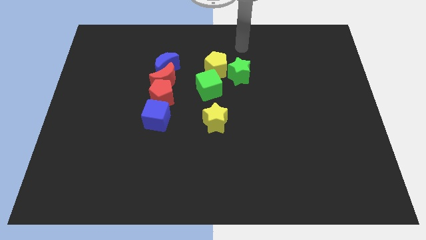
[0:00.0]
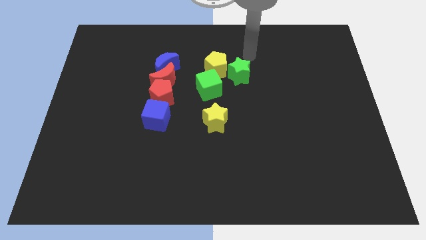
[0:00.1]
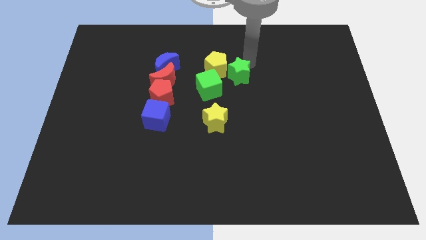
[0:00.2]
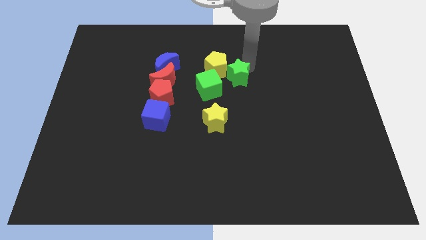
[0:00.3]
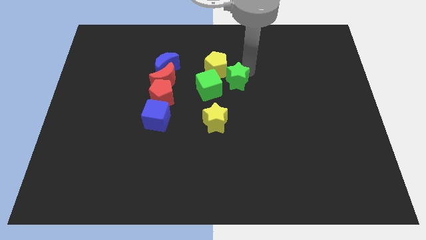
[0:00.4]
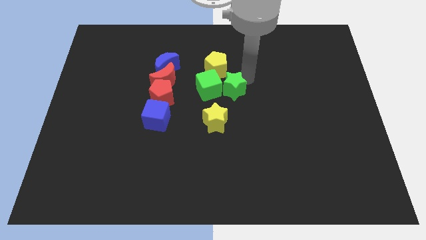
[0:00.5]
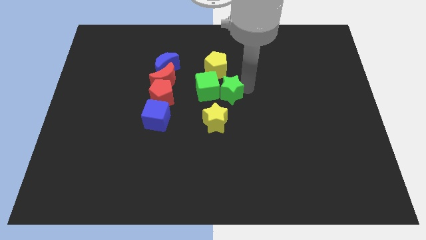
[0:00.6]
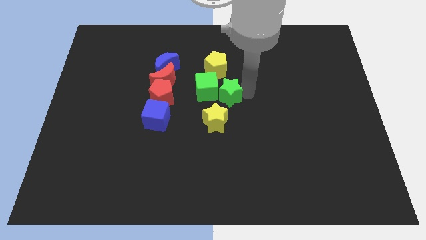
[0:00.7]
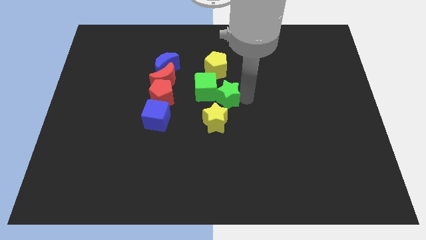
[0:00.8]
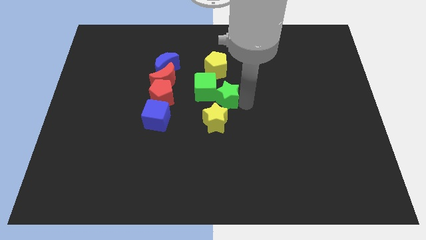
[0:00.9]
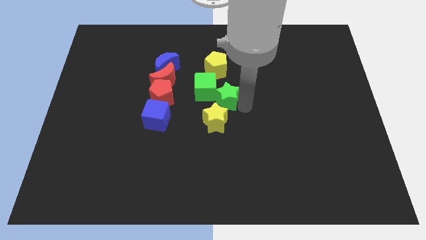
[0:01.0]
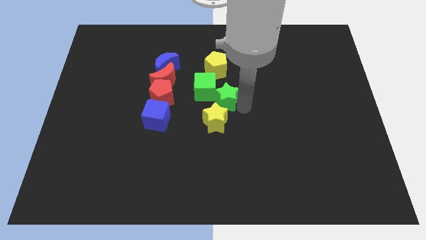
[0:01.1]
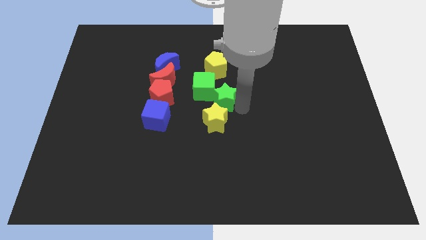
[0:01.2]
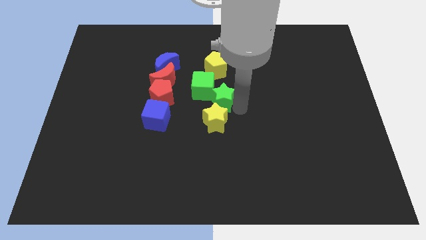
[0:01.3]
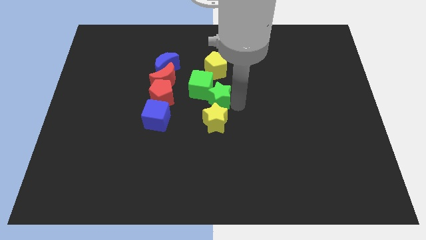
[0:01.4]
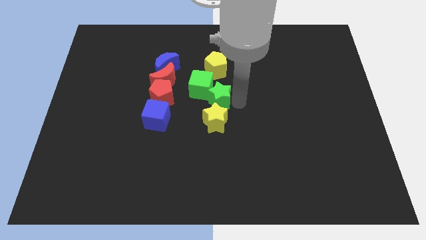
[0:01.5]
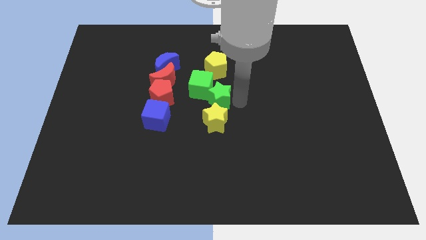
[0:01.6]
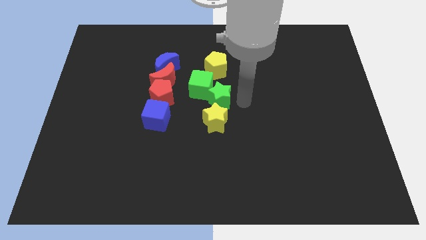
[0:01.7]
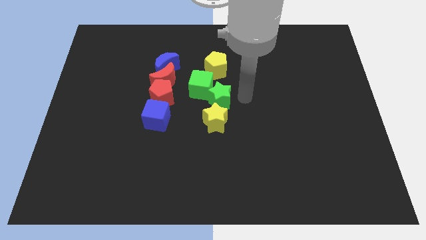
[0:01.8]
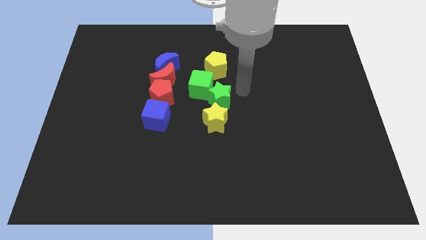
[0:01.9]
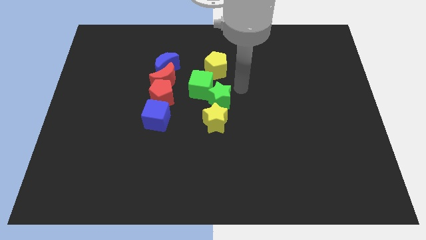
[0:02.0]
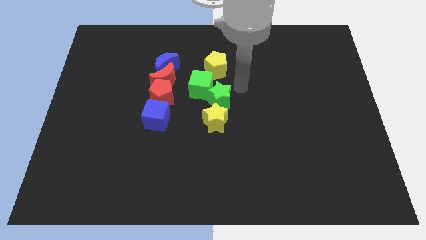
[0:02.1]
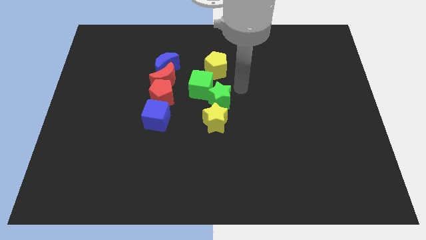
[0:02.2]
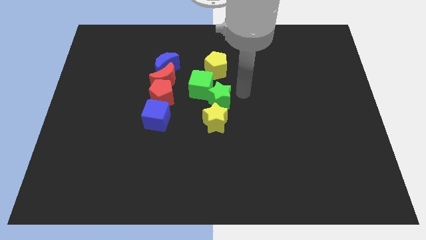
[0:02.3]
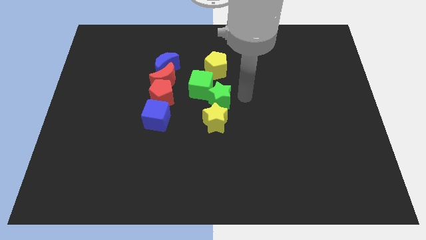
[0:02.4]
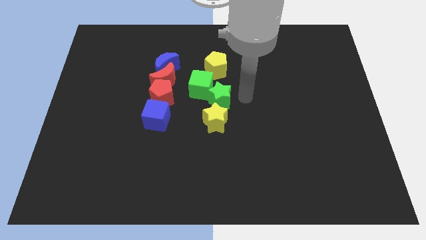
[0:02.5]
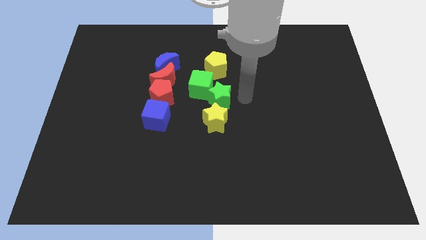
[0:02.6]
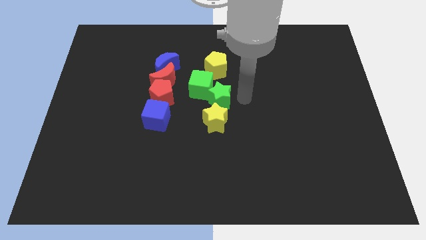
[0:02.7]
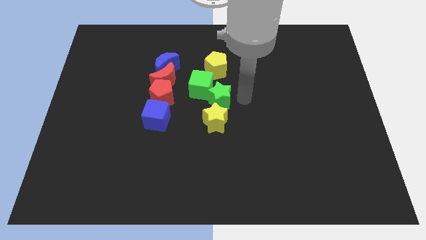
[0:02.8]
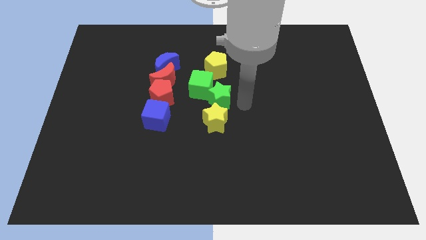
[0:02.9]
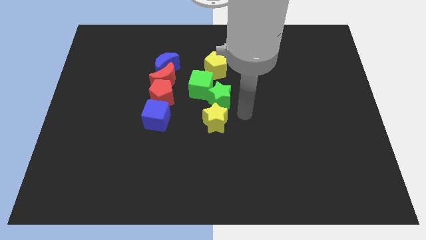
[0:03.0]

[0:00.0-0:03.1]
push the green star to the top of the yellow star

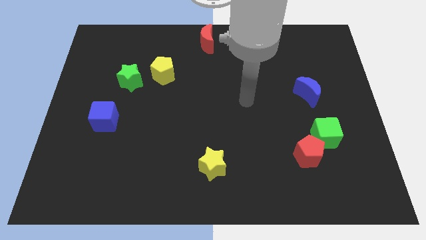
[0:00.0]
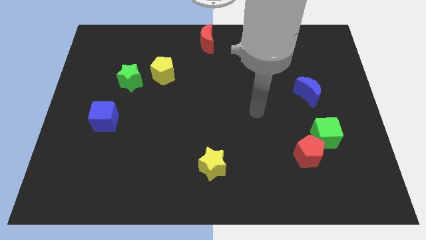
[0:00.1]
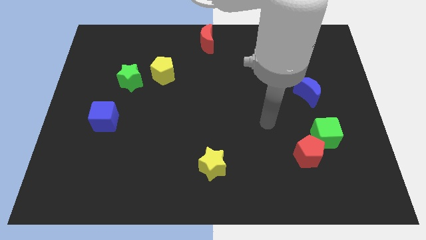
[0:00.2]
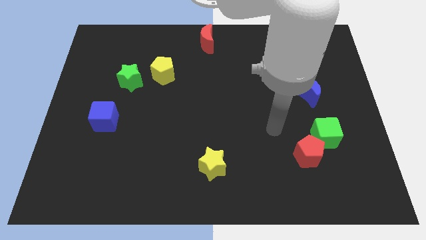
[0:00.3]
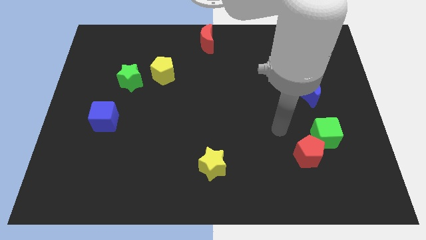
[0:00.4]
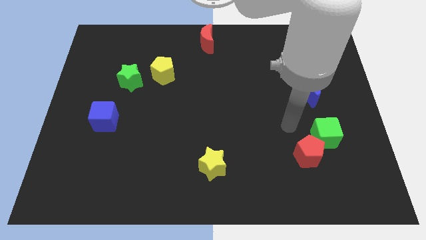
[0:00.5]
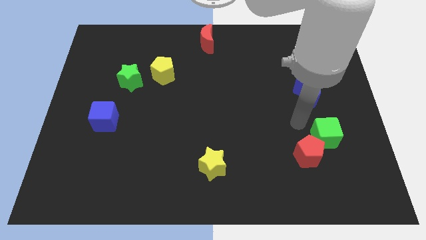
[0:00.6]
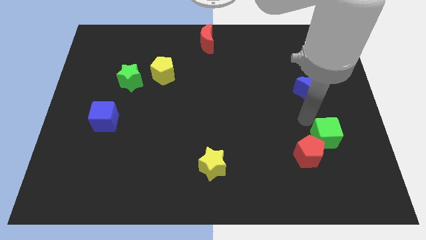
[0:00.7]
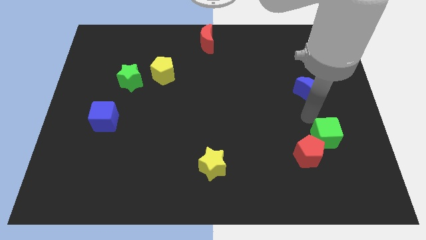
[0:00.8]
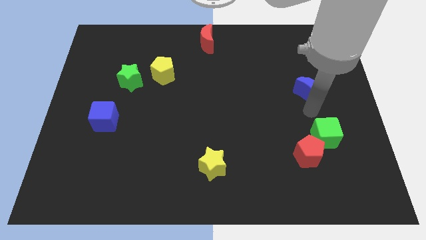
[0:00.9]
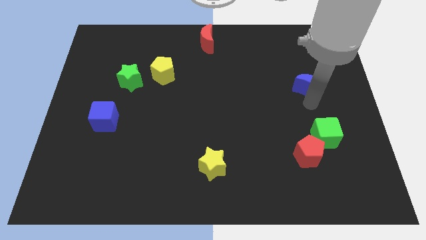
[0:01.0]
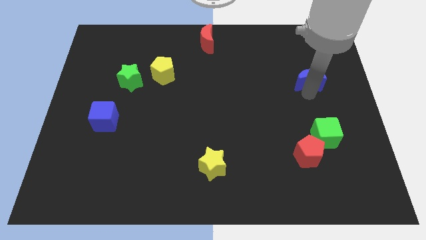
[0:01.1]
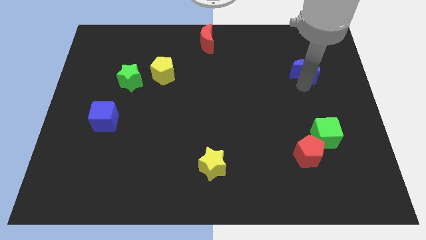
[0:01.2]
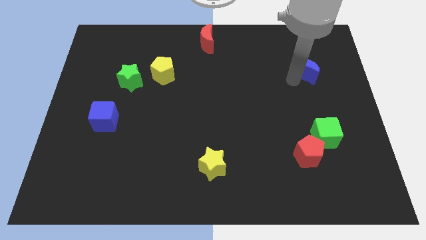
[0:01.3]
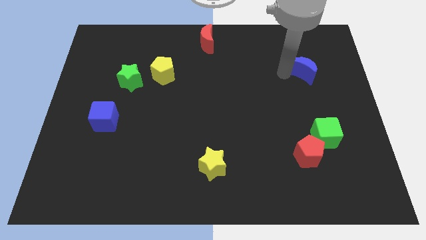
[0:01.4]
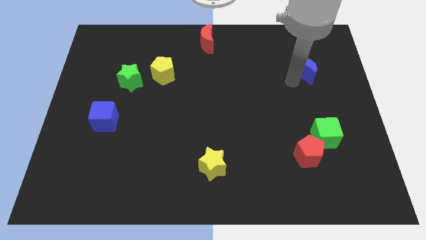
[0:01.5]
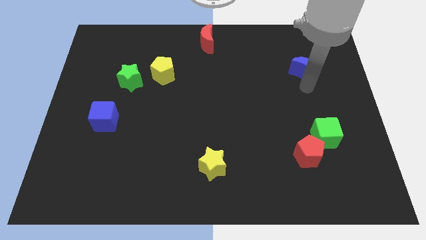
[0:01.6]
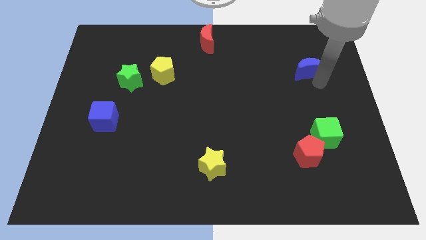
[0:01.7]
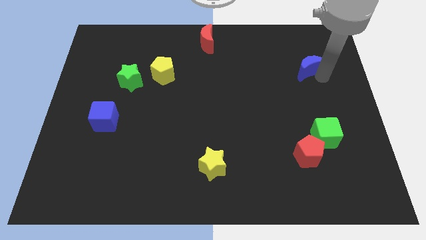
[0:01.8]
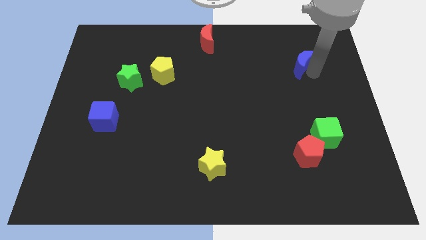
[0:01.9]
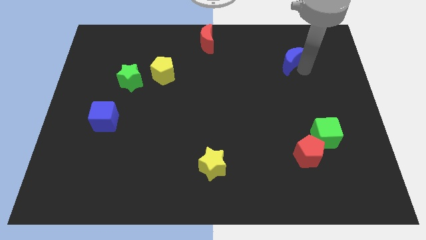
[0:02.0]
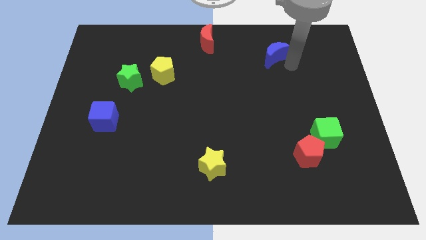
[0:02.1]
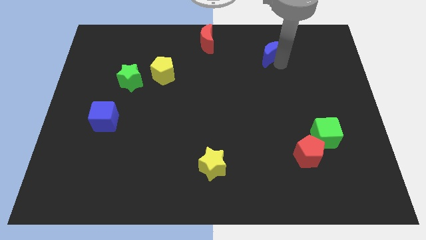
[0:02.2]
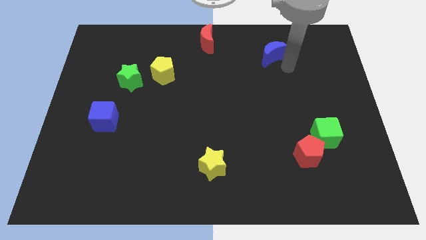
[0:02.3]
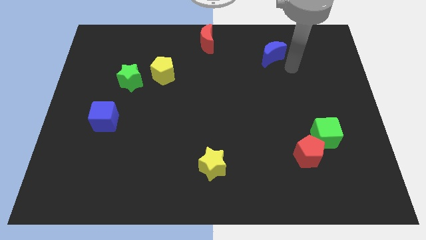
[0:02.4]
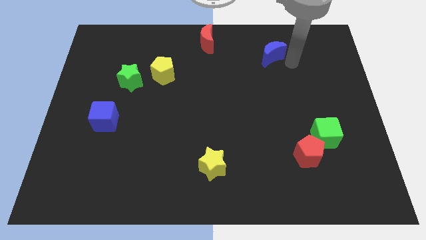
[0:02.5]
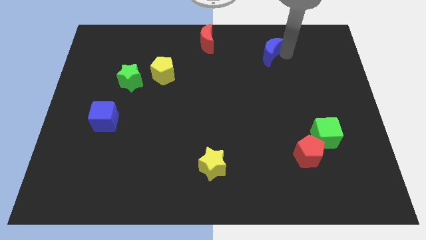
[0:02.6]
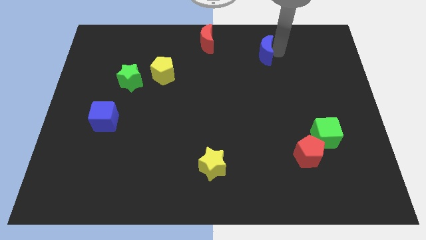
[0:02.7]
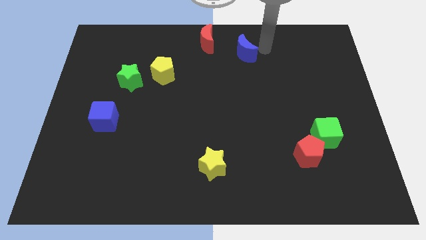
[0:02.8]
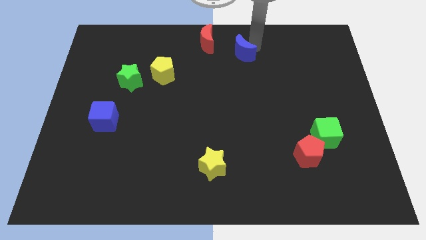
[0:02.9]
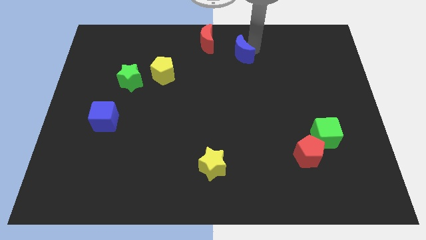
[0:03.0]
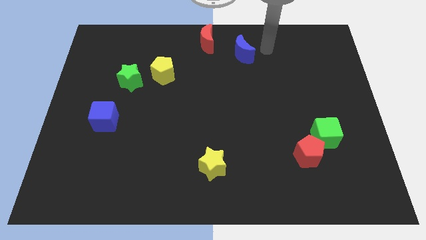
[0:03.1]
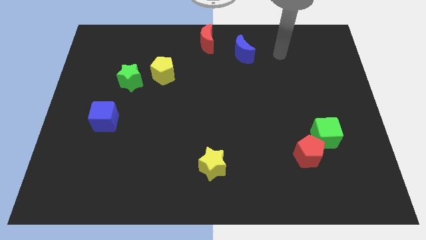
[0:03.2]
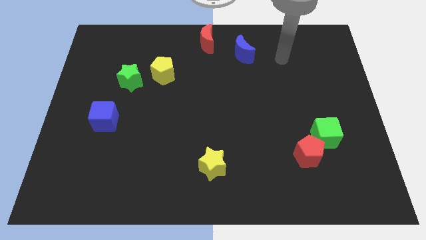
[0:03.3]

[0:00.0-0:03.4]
place the blue crescent to the right of the red crescent

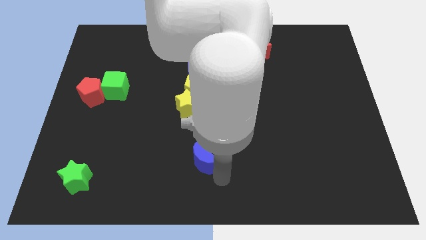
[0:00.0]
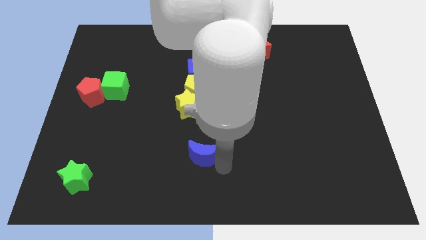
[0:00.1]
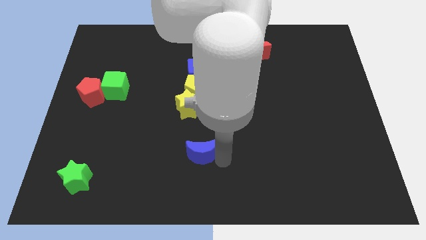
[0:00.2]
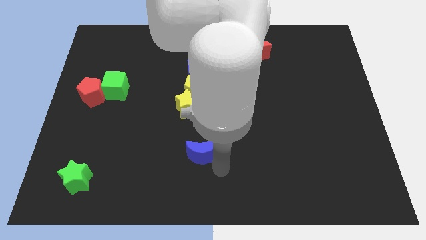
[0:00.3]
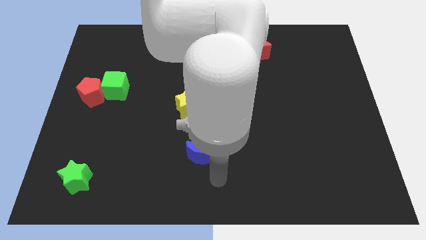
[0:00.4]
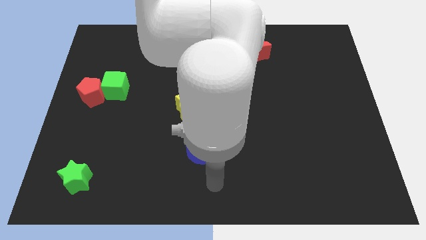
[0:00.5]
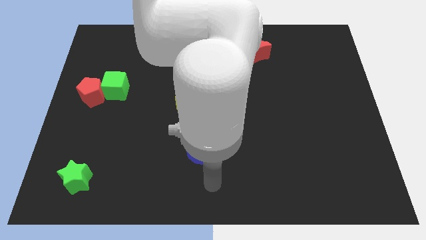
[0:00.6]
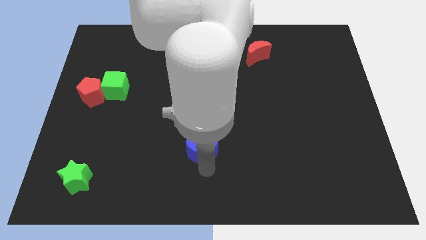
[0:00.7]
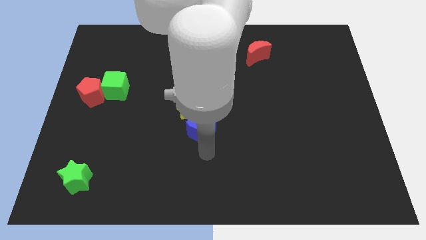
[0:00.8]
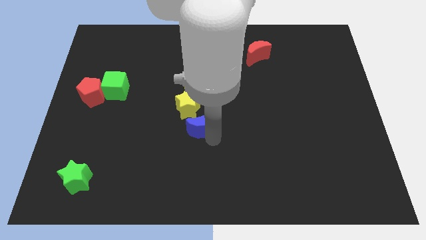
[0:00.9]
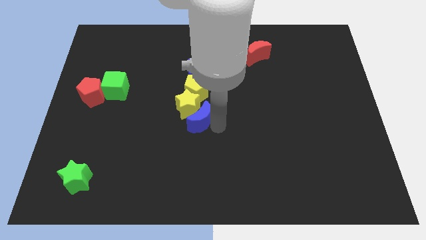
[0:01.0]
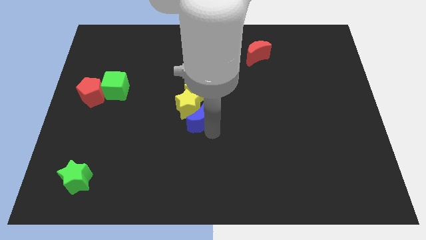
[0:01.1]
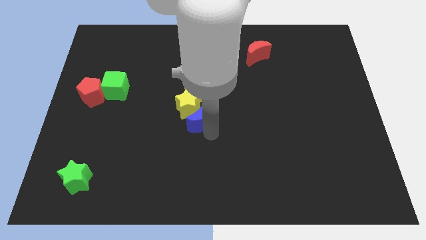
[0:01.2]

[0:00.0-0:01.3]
move the blue moon close to the yellow star

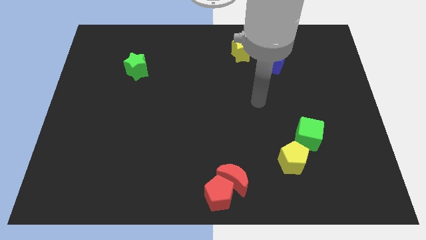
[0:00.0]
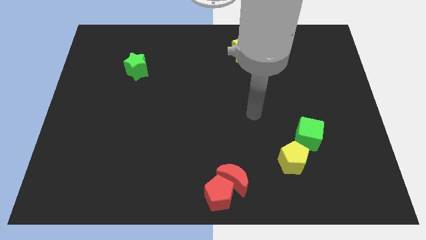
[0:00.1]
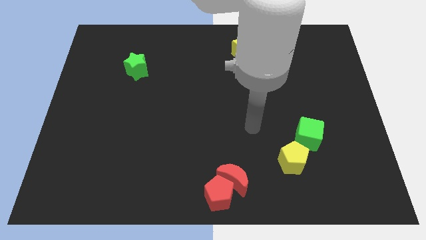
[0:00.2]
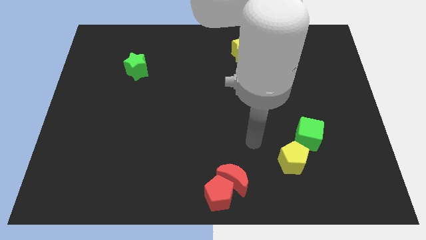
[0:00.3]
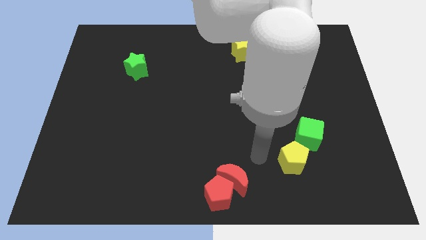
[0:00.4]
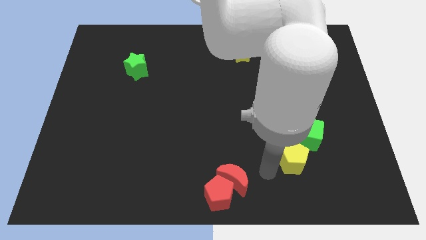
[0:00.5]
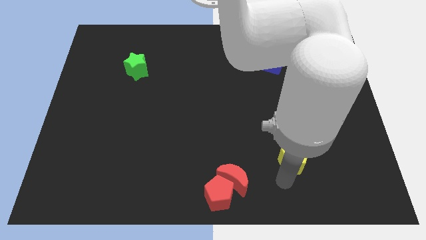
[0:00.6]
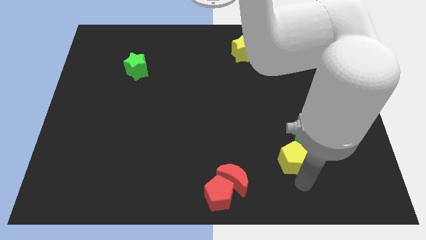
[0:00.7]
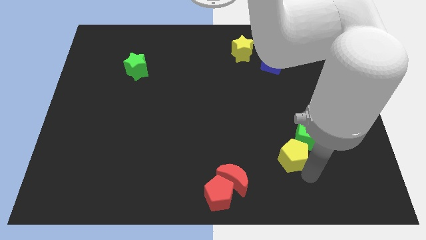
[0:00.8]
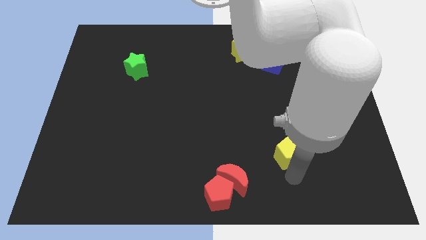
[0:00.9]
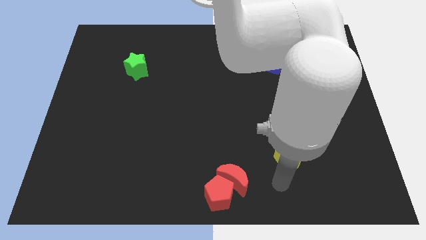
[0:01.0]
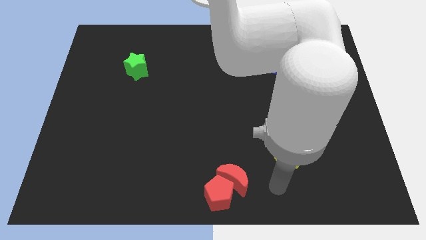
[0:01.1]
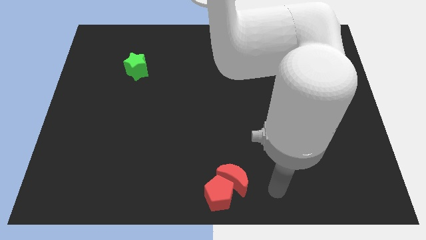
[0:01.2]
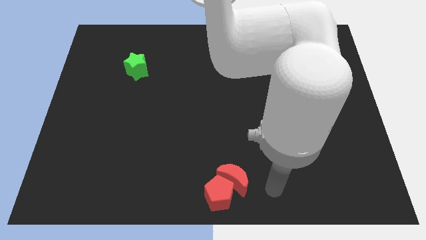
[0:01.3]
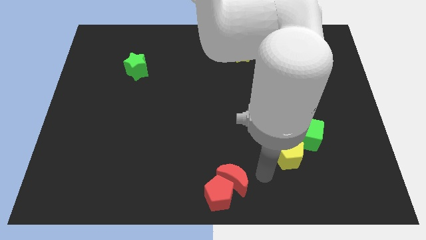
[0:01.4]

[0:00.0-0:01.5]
move the arm in between the yellow pentagon and red crescent
